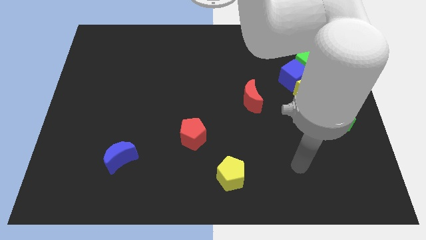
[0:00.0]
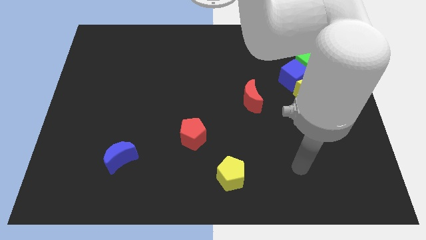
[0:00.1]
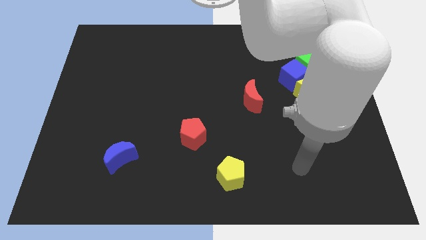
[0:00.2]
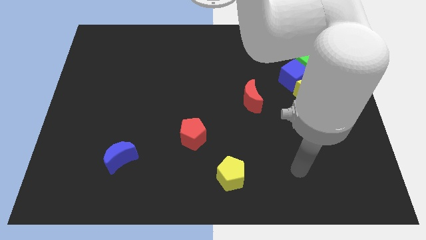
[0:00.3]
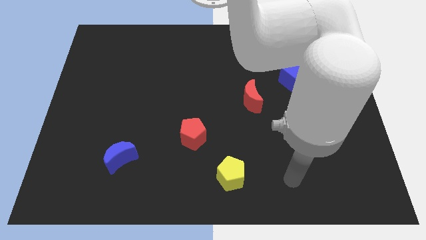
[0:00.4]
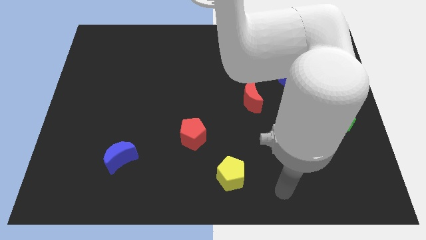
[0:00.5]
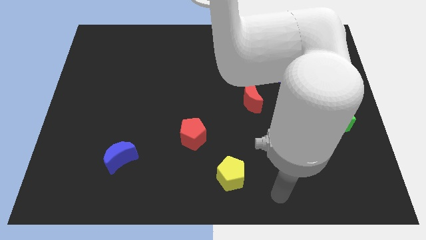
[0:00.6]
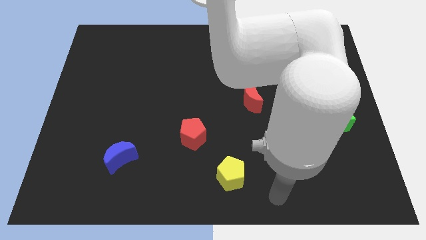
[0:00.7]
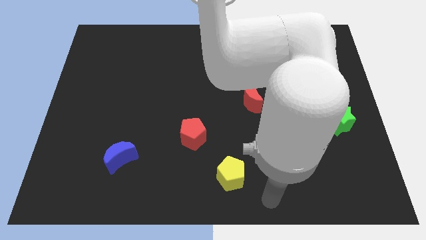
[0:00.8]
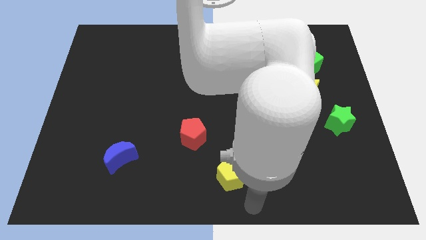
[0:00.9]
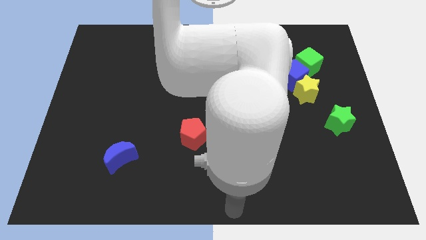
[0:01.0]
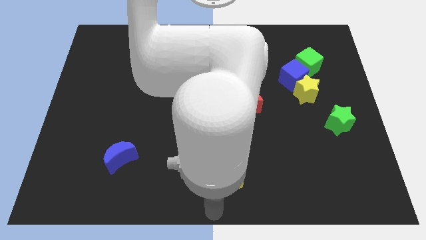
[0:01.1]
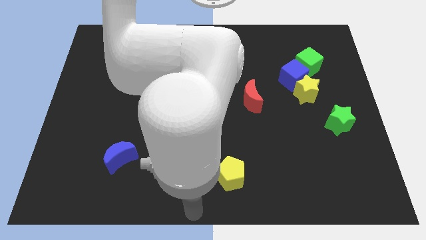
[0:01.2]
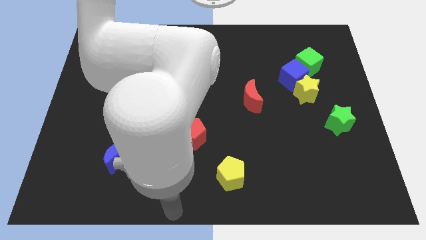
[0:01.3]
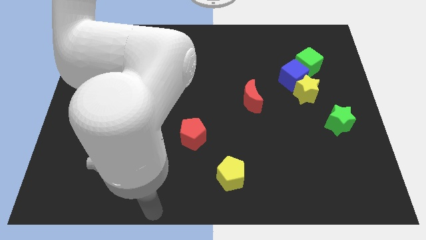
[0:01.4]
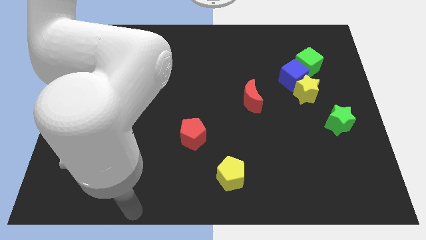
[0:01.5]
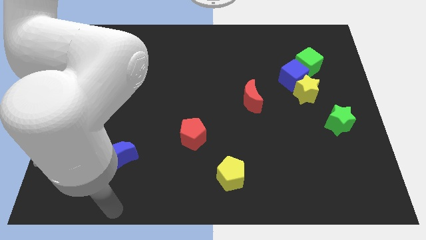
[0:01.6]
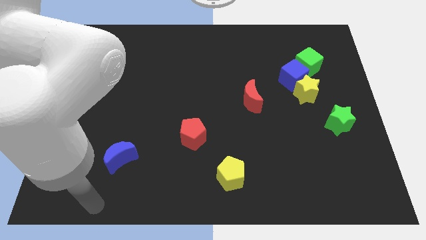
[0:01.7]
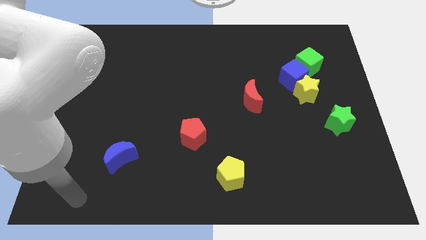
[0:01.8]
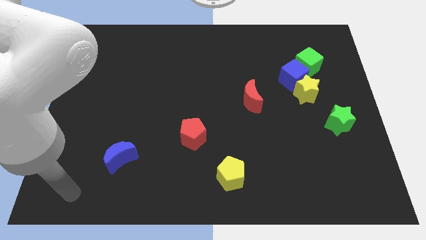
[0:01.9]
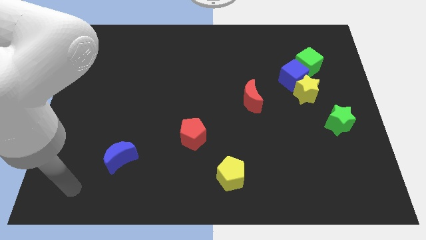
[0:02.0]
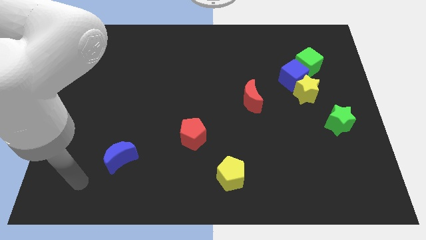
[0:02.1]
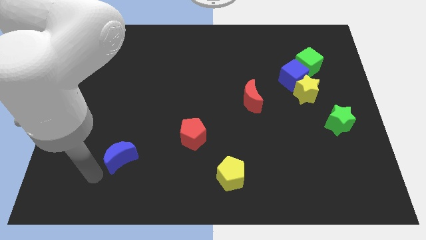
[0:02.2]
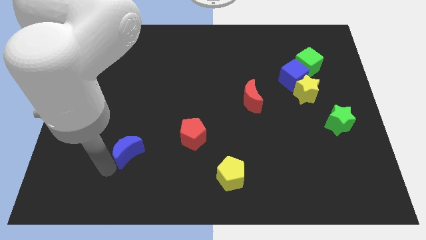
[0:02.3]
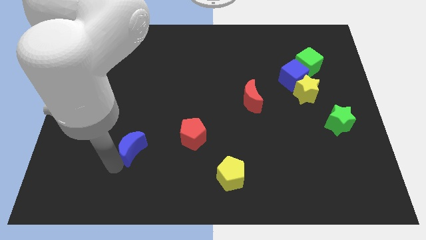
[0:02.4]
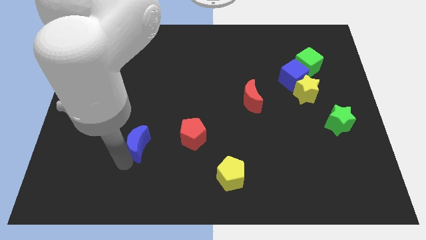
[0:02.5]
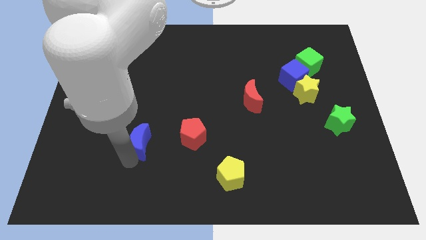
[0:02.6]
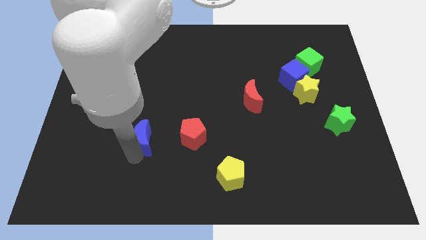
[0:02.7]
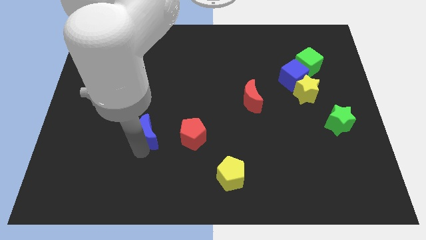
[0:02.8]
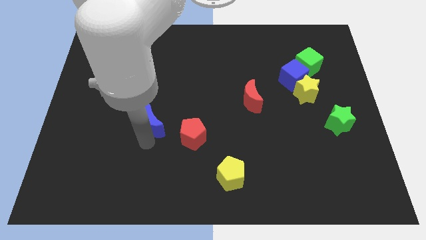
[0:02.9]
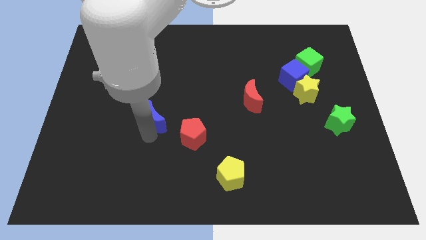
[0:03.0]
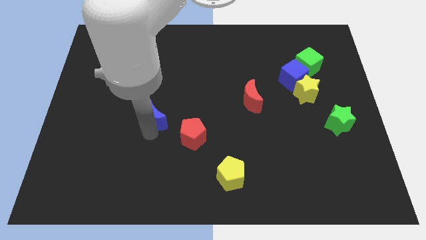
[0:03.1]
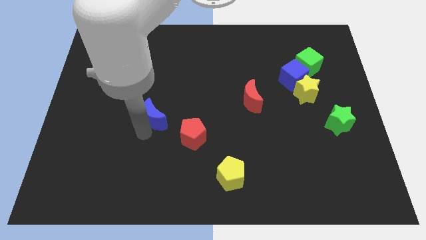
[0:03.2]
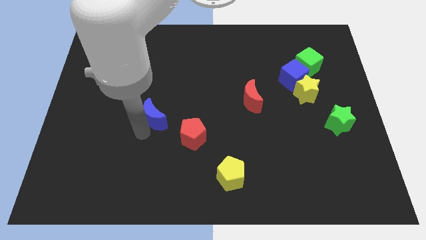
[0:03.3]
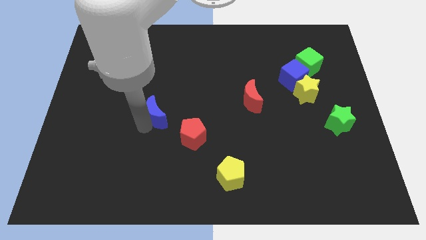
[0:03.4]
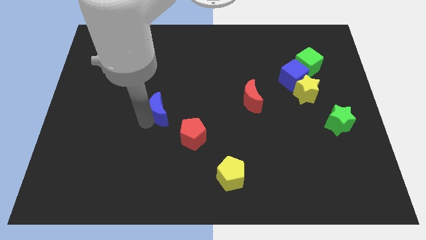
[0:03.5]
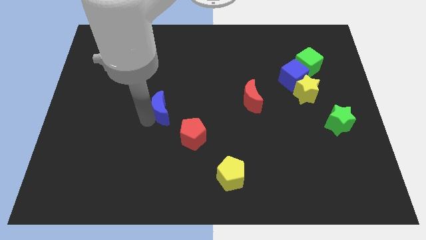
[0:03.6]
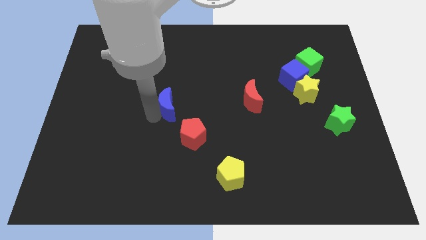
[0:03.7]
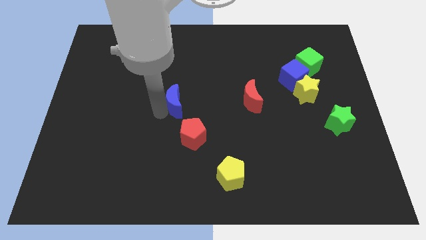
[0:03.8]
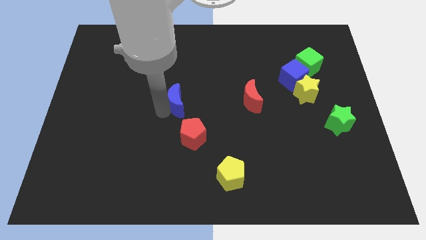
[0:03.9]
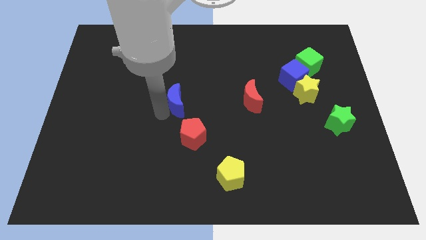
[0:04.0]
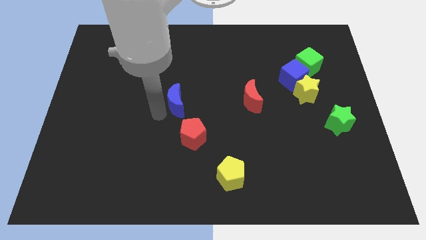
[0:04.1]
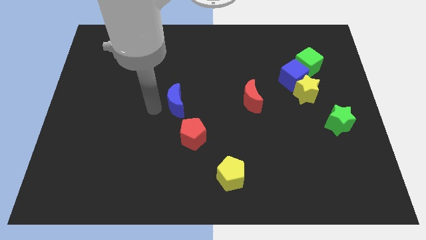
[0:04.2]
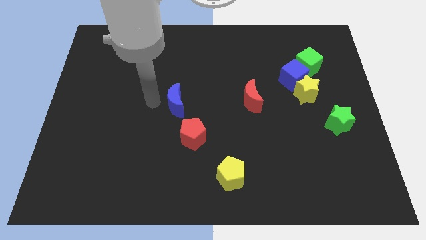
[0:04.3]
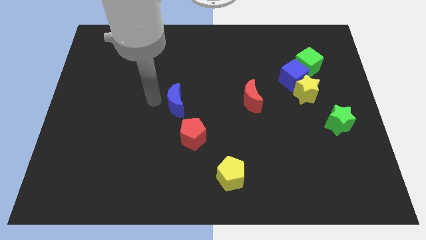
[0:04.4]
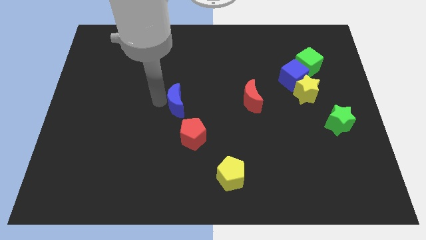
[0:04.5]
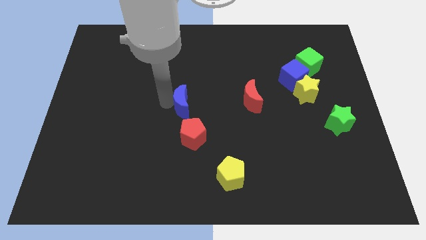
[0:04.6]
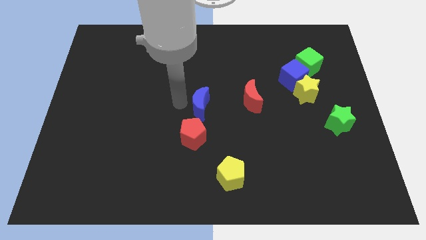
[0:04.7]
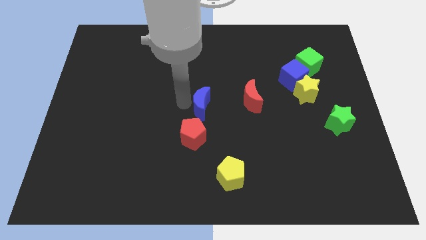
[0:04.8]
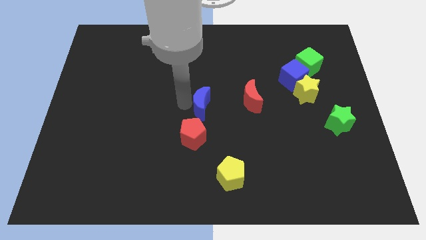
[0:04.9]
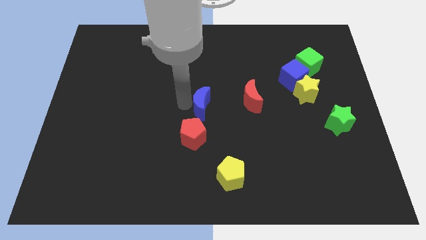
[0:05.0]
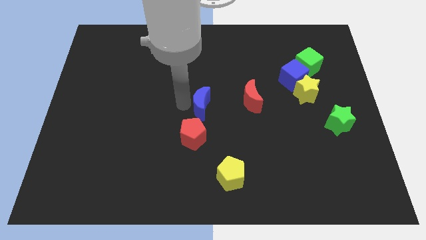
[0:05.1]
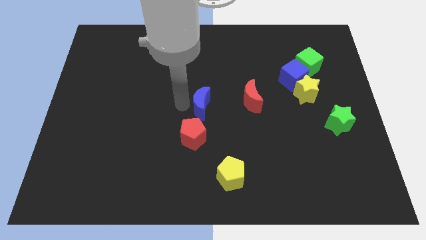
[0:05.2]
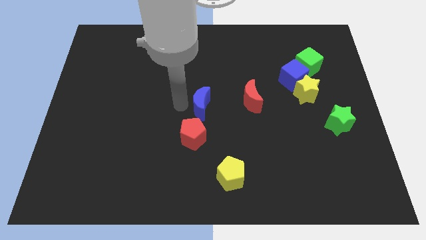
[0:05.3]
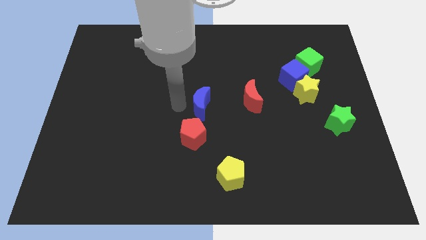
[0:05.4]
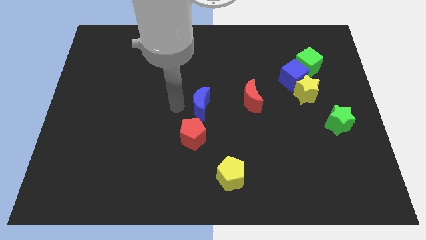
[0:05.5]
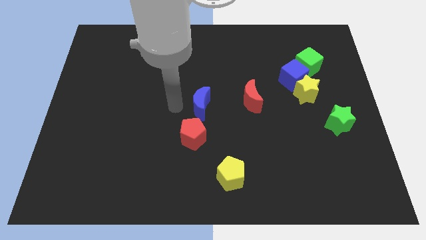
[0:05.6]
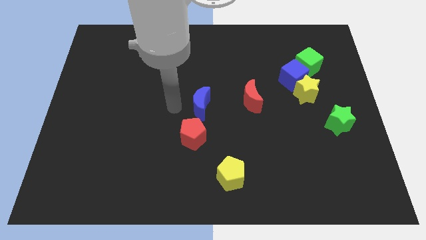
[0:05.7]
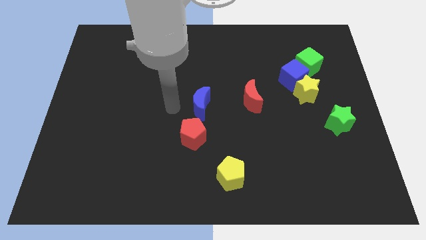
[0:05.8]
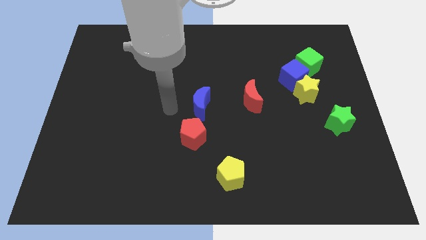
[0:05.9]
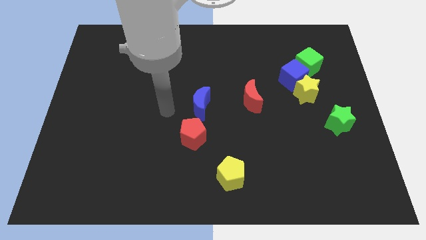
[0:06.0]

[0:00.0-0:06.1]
move the blue crescent to the left of the red crescent

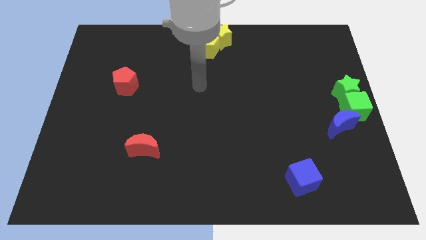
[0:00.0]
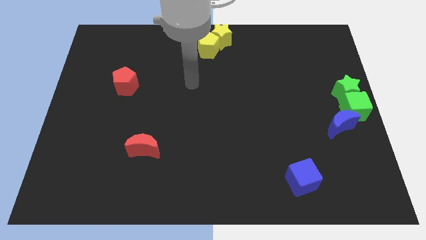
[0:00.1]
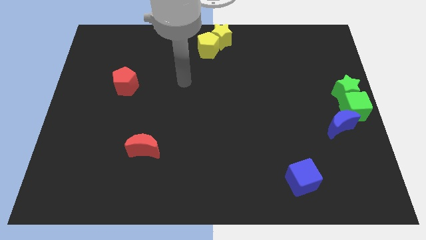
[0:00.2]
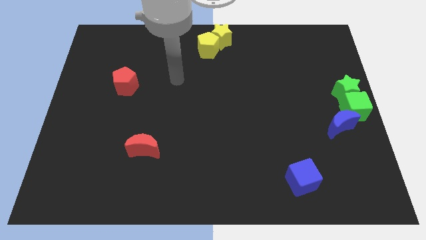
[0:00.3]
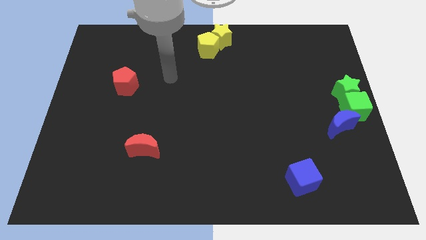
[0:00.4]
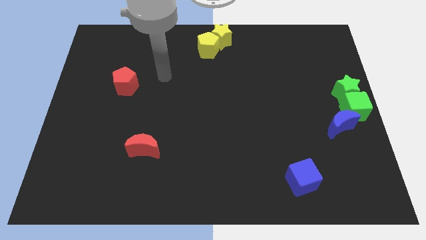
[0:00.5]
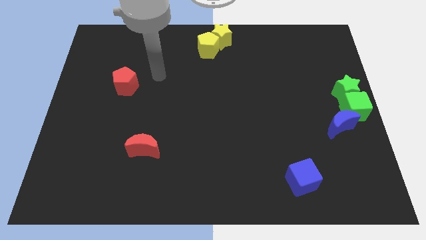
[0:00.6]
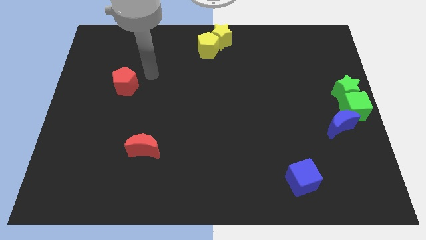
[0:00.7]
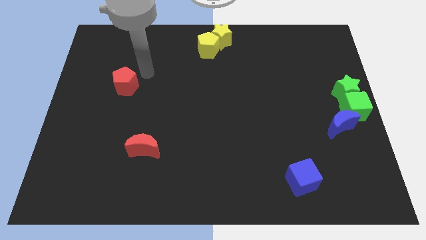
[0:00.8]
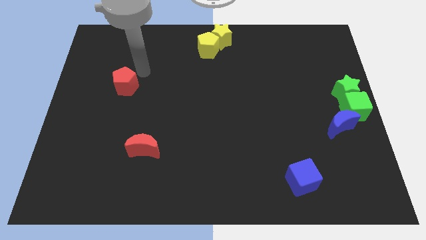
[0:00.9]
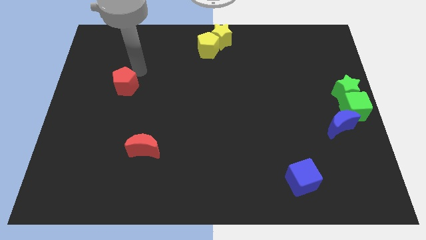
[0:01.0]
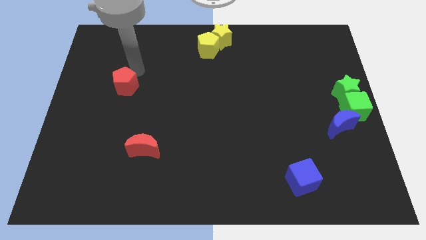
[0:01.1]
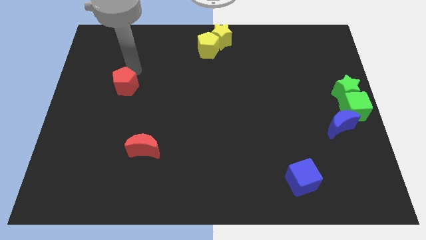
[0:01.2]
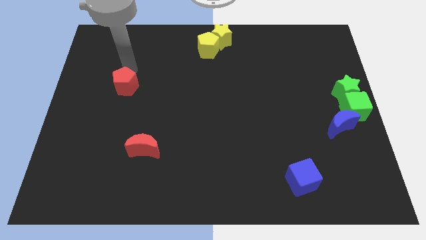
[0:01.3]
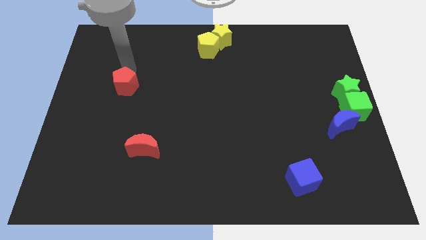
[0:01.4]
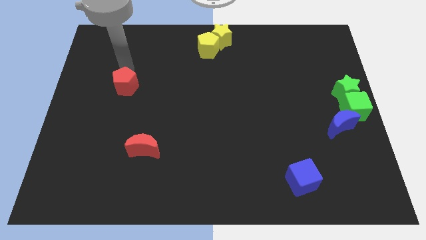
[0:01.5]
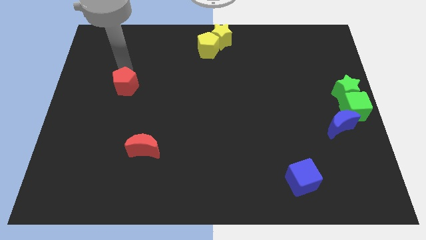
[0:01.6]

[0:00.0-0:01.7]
place the arm to the top of the red pentagon

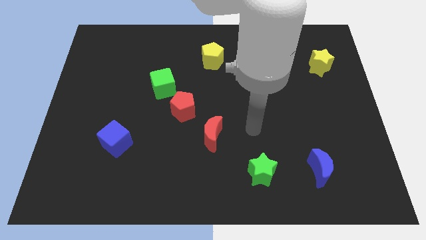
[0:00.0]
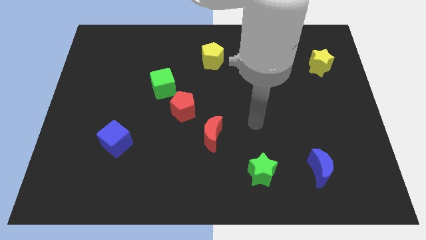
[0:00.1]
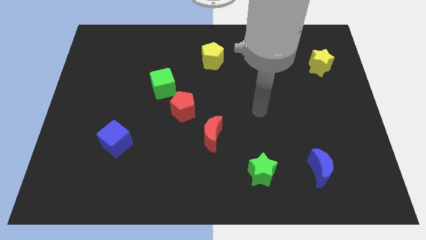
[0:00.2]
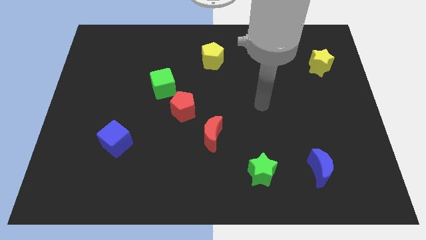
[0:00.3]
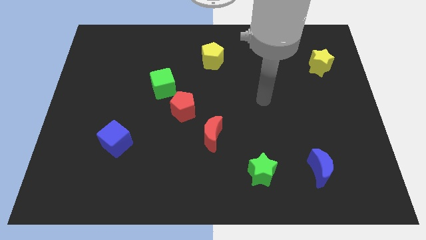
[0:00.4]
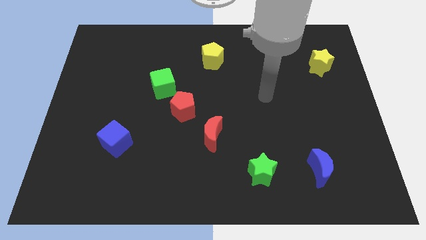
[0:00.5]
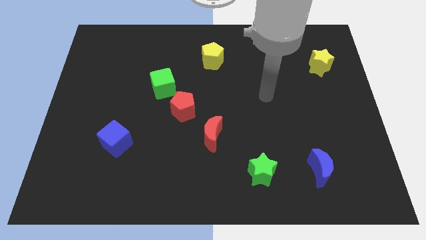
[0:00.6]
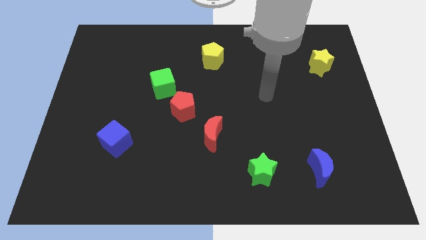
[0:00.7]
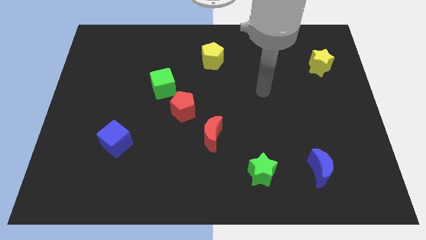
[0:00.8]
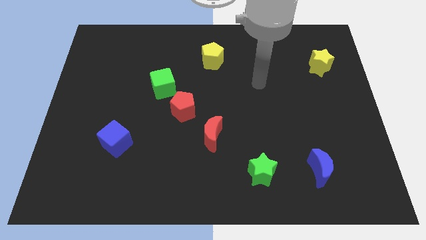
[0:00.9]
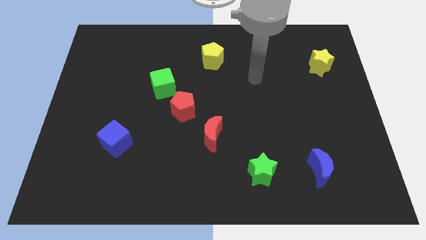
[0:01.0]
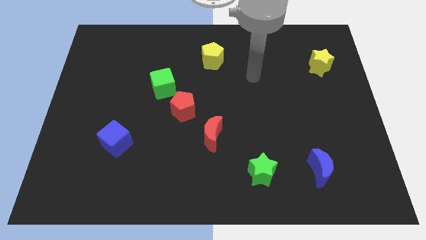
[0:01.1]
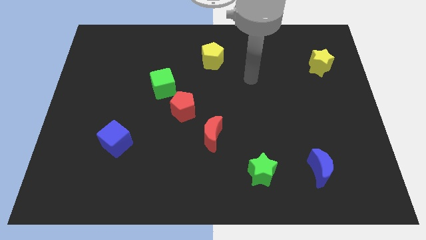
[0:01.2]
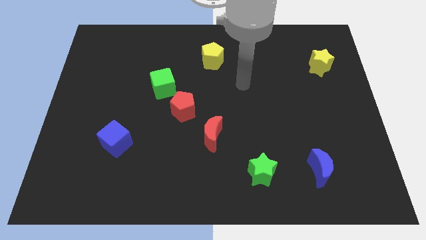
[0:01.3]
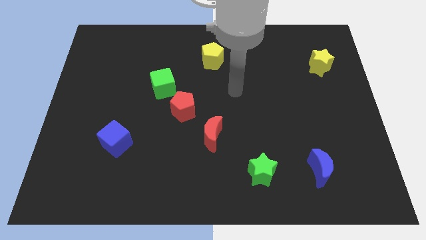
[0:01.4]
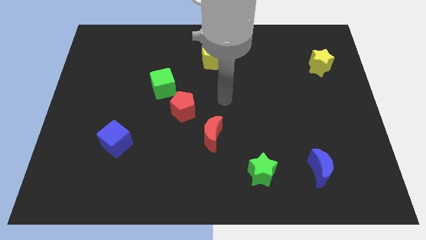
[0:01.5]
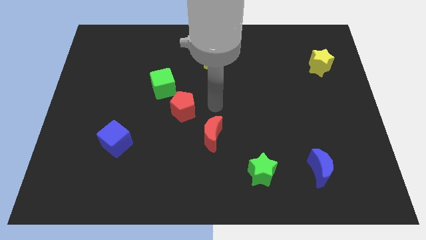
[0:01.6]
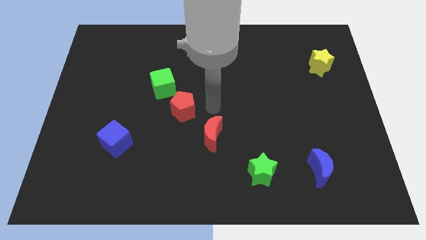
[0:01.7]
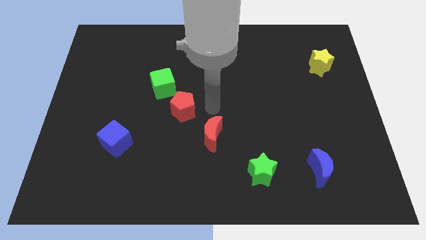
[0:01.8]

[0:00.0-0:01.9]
point your hand above the red crescent
